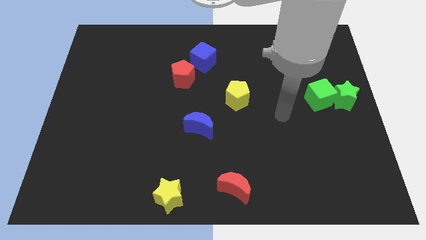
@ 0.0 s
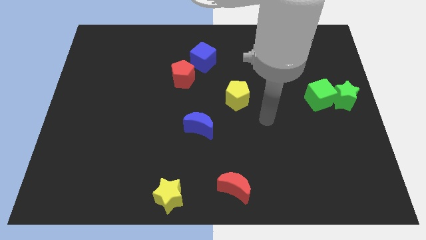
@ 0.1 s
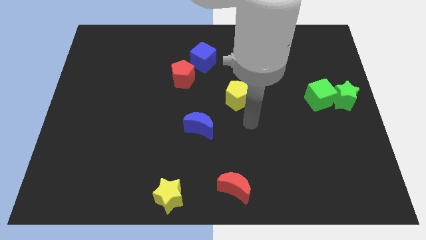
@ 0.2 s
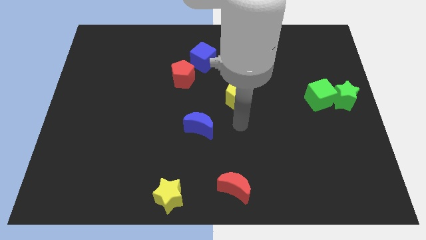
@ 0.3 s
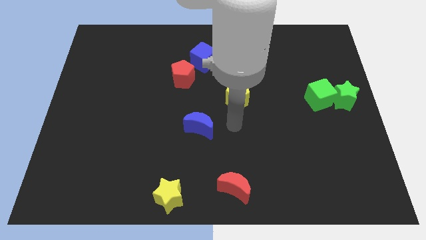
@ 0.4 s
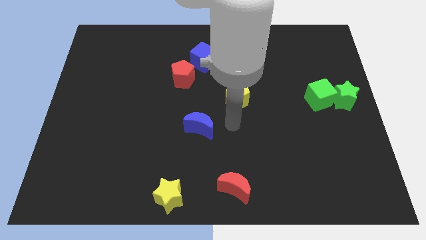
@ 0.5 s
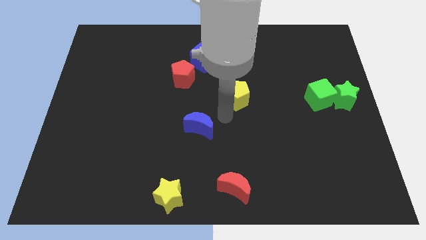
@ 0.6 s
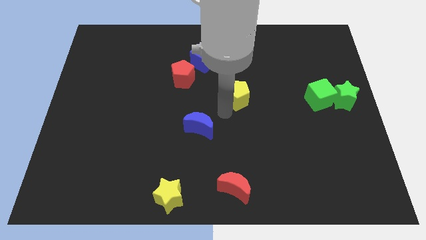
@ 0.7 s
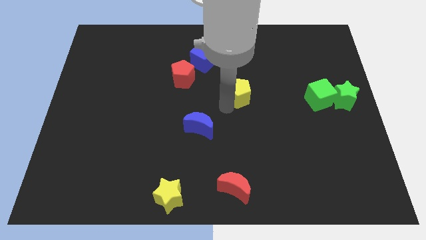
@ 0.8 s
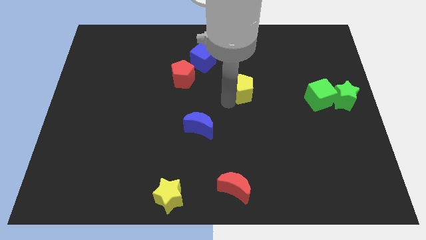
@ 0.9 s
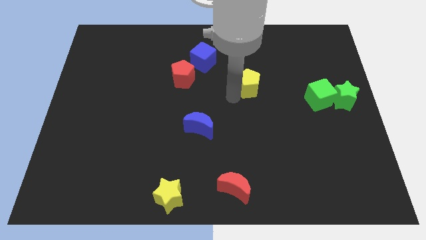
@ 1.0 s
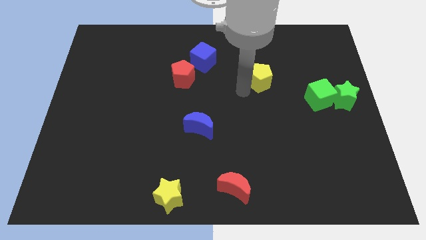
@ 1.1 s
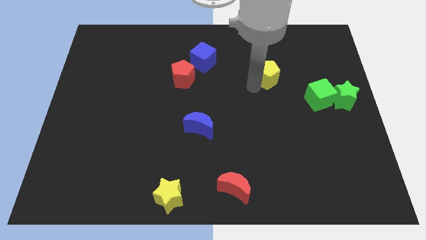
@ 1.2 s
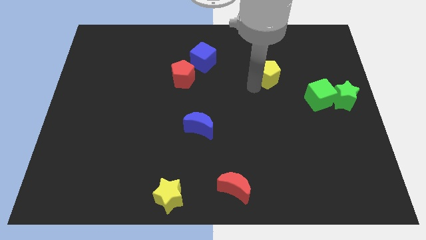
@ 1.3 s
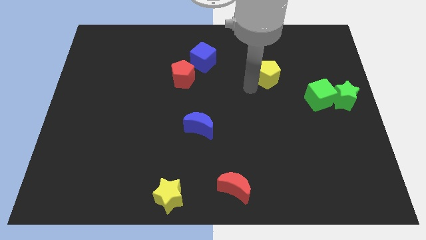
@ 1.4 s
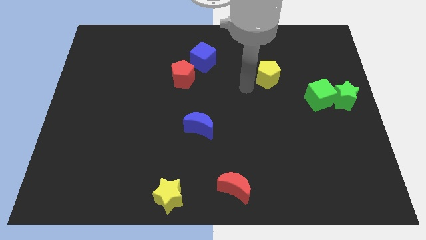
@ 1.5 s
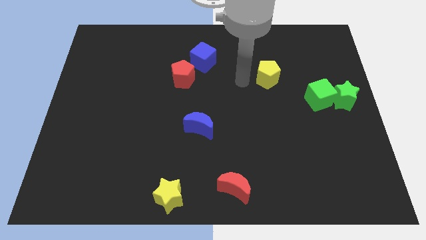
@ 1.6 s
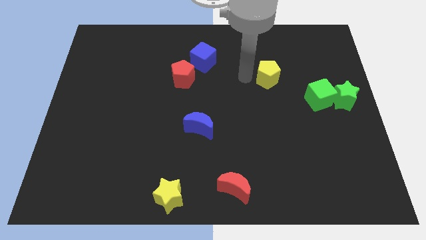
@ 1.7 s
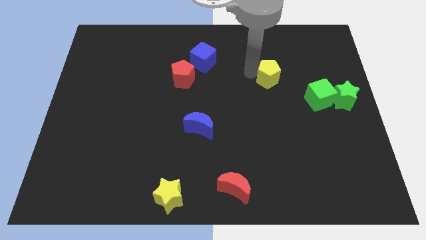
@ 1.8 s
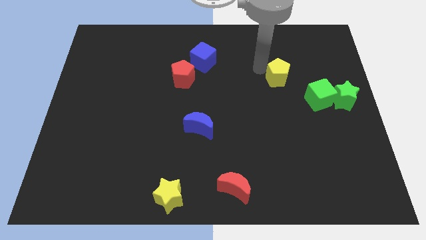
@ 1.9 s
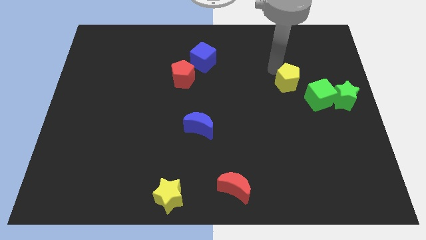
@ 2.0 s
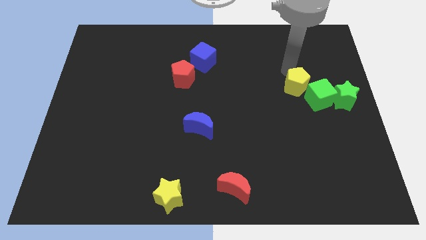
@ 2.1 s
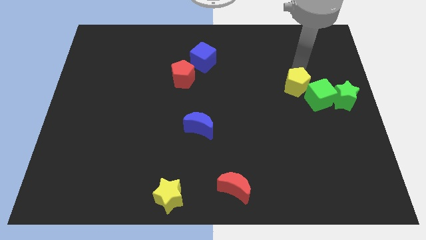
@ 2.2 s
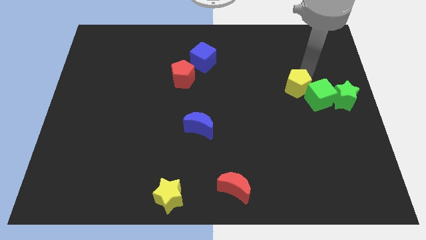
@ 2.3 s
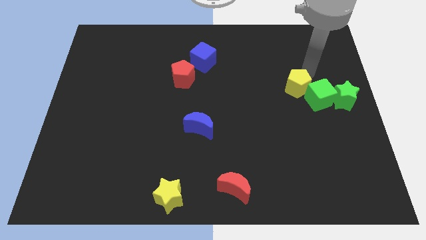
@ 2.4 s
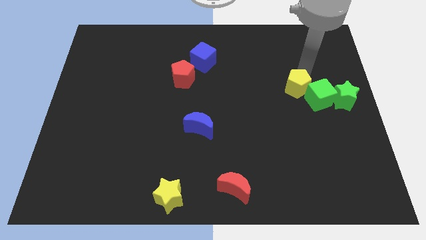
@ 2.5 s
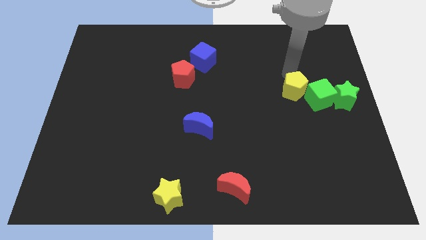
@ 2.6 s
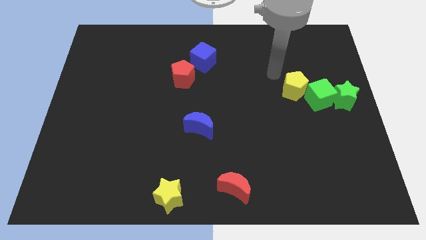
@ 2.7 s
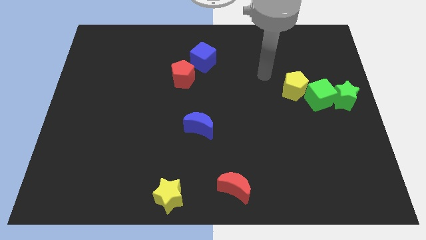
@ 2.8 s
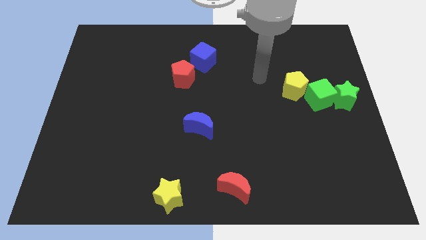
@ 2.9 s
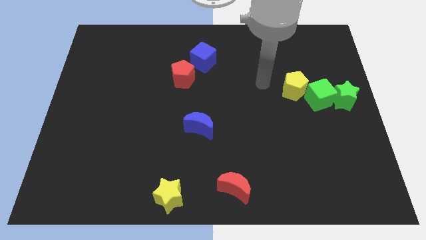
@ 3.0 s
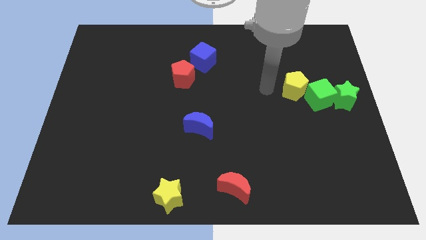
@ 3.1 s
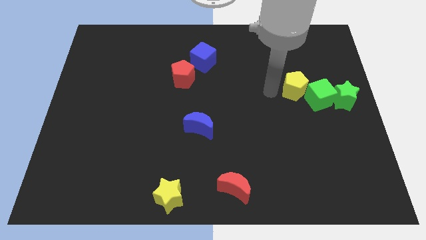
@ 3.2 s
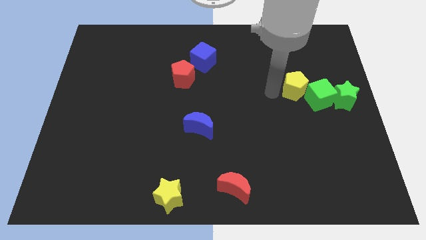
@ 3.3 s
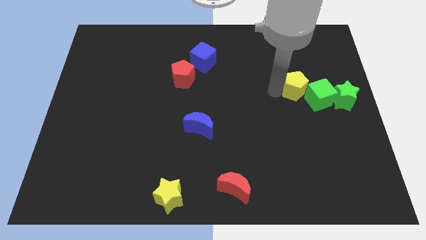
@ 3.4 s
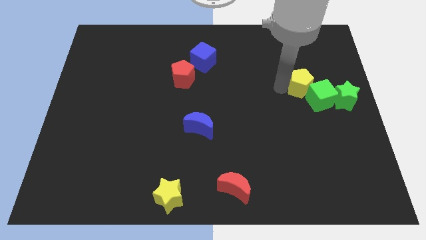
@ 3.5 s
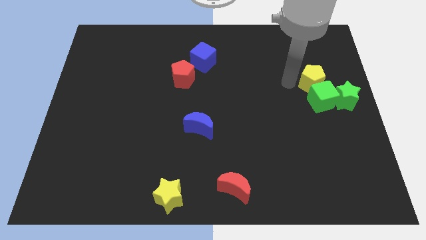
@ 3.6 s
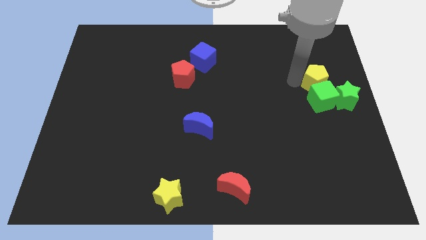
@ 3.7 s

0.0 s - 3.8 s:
put the yellow pentagon vertically above the green cube

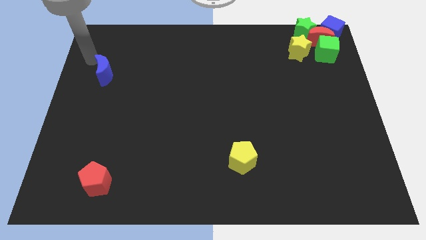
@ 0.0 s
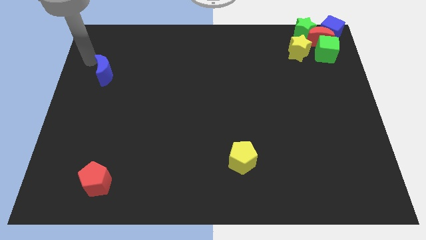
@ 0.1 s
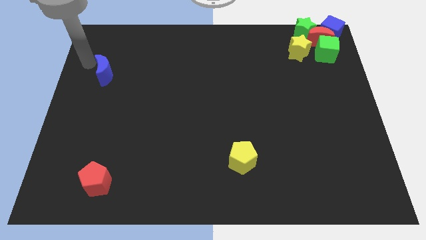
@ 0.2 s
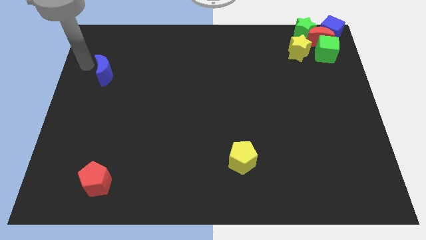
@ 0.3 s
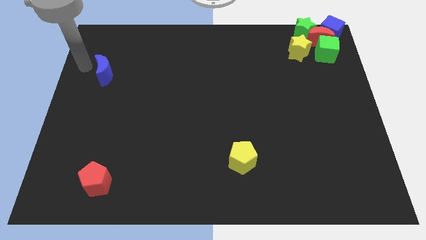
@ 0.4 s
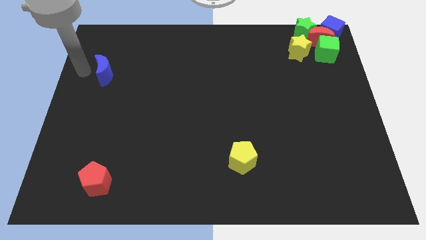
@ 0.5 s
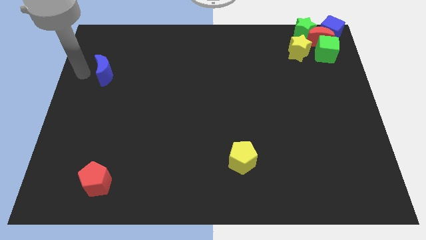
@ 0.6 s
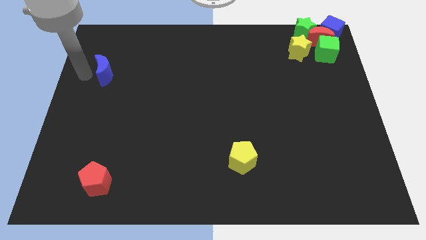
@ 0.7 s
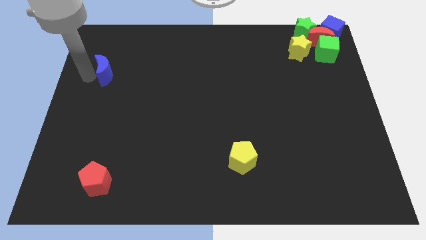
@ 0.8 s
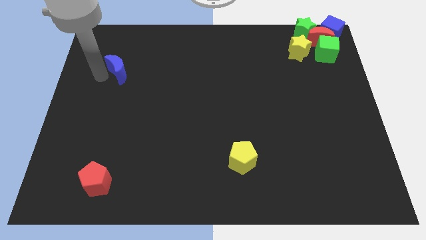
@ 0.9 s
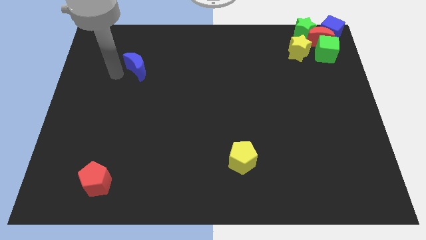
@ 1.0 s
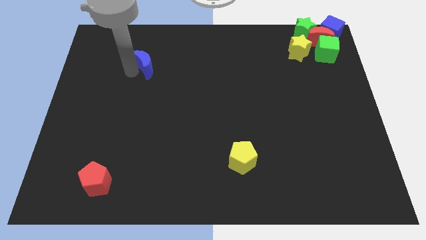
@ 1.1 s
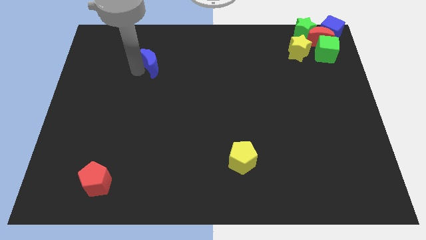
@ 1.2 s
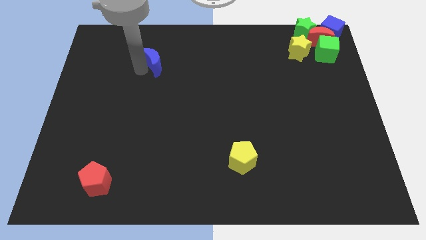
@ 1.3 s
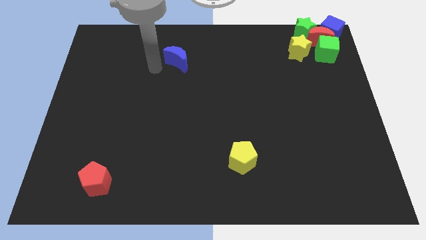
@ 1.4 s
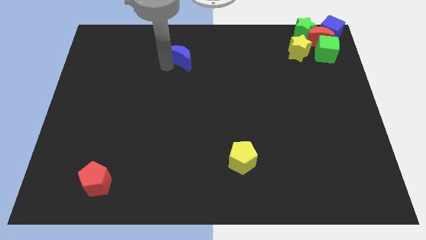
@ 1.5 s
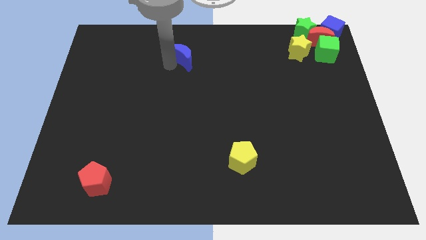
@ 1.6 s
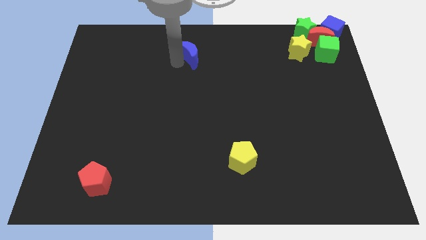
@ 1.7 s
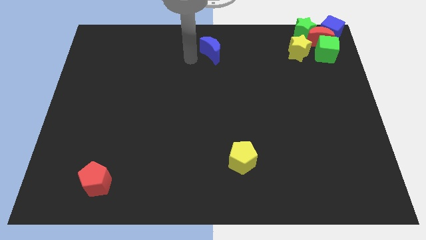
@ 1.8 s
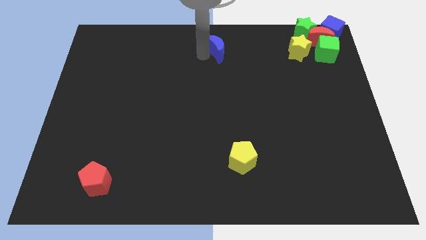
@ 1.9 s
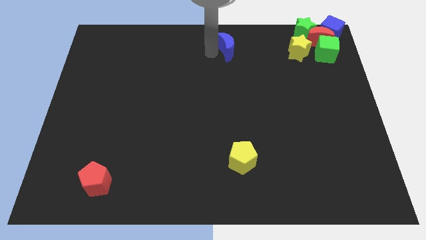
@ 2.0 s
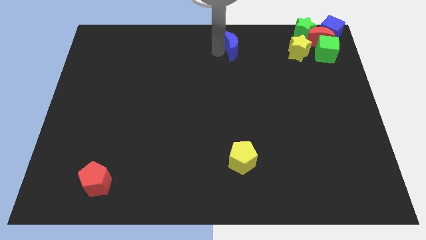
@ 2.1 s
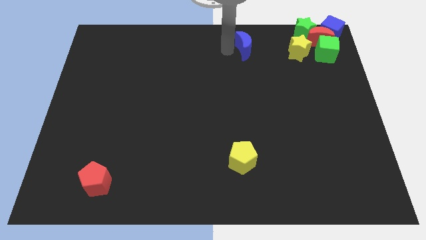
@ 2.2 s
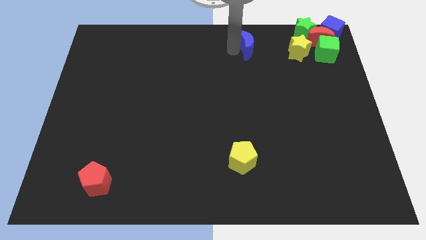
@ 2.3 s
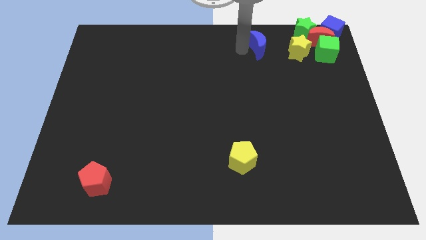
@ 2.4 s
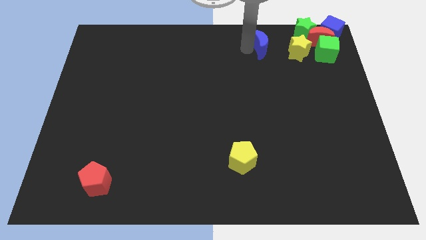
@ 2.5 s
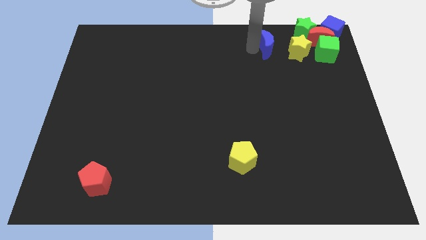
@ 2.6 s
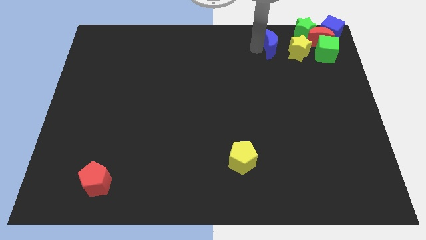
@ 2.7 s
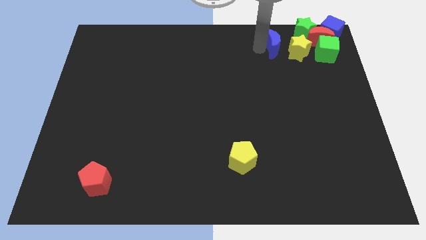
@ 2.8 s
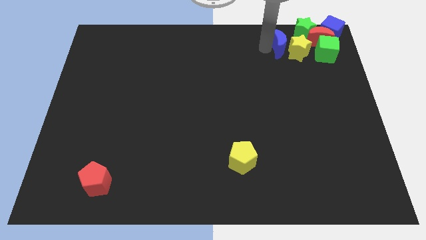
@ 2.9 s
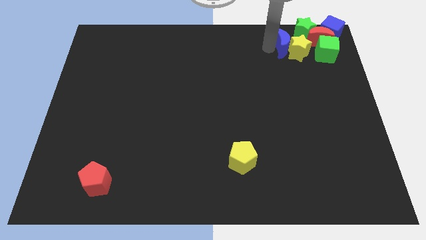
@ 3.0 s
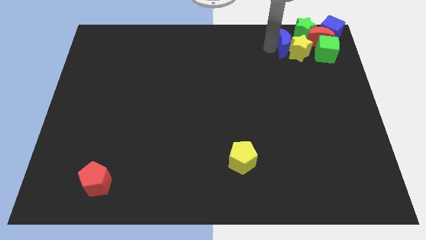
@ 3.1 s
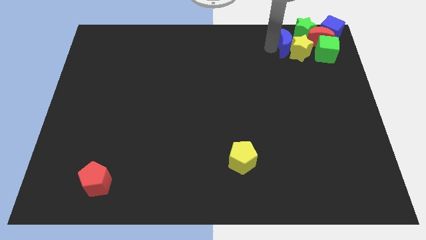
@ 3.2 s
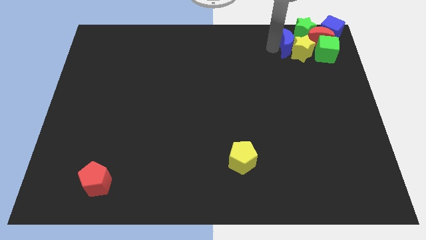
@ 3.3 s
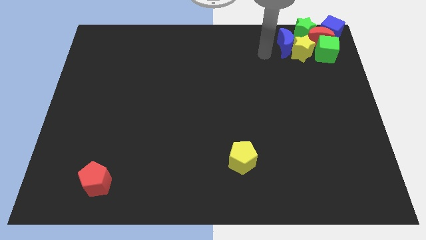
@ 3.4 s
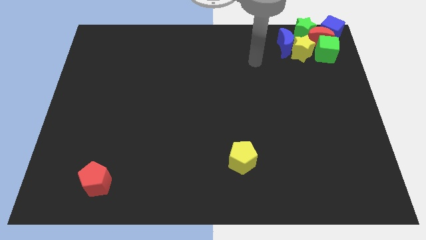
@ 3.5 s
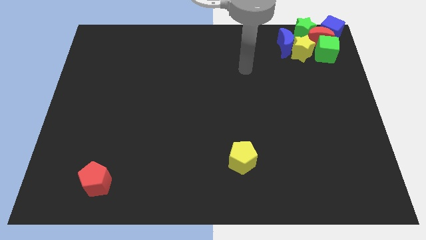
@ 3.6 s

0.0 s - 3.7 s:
push the blue moon close to the group of blocks

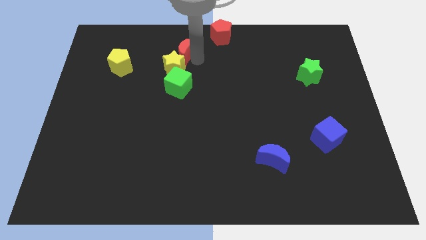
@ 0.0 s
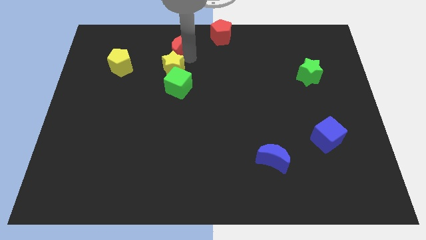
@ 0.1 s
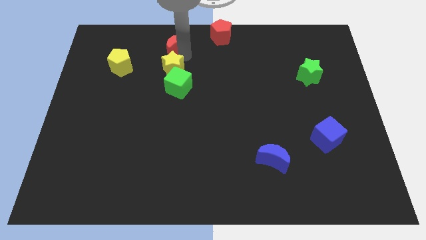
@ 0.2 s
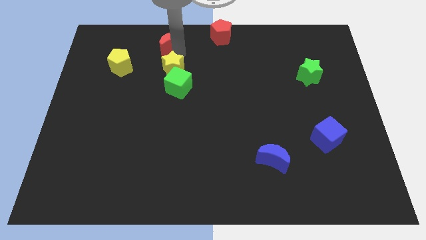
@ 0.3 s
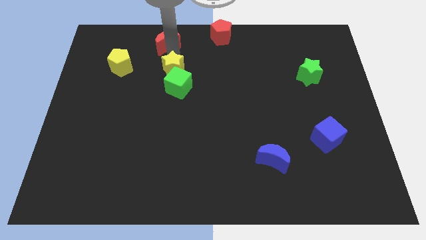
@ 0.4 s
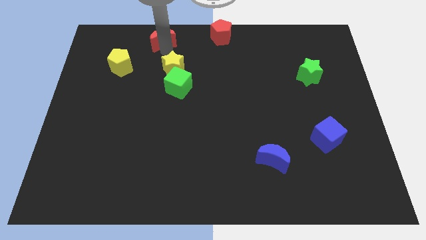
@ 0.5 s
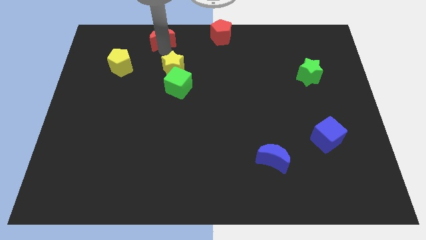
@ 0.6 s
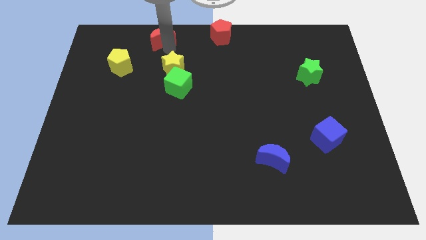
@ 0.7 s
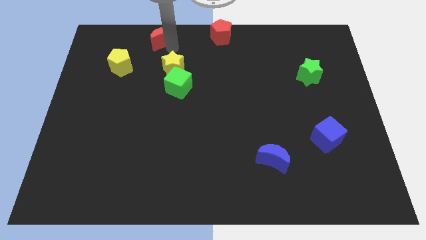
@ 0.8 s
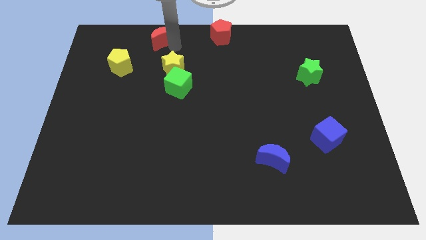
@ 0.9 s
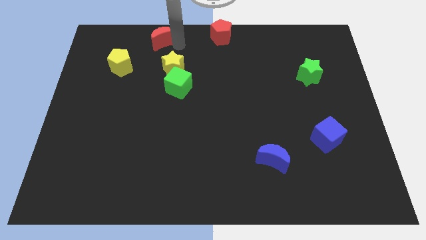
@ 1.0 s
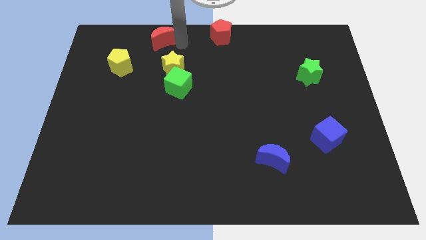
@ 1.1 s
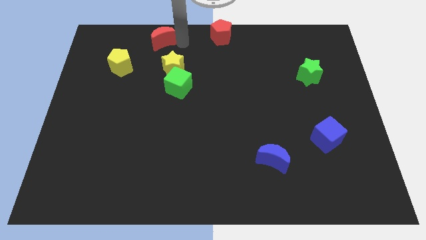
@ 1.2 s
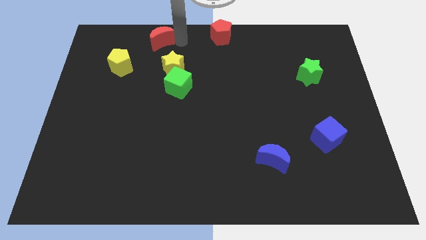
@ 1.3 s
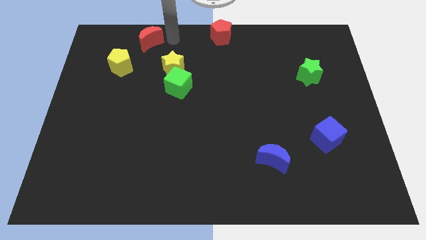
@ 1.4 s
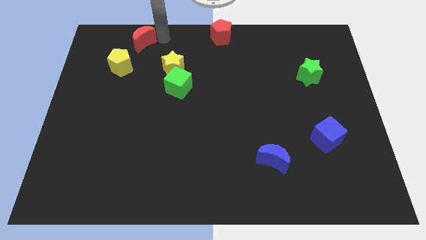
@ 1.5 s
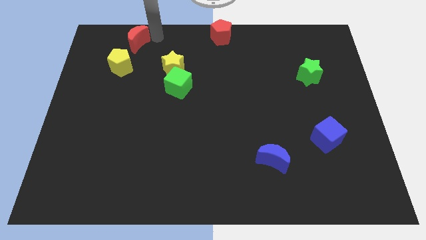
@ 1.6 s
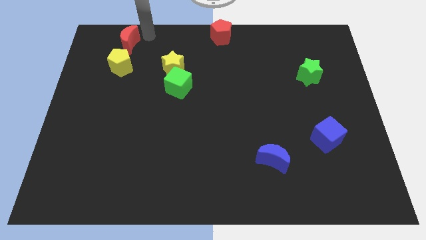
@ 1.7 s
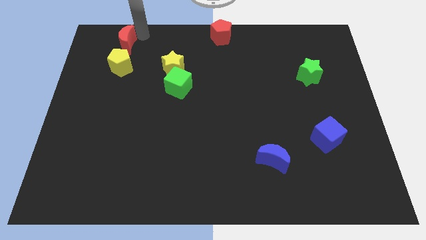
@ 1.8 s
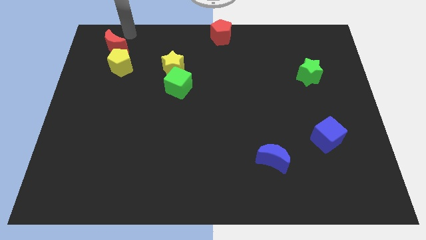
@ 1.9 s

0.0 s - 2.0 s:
move the red moon above the yellow pentagon
